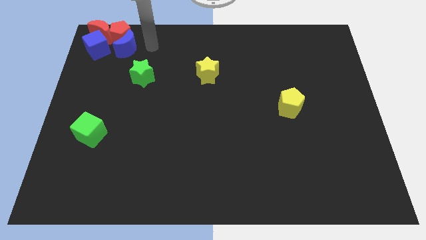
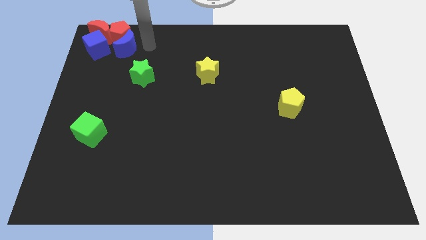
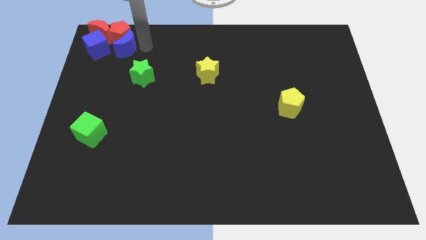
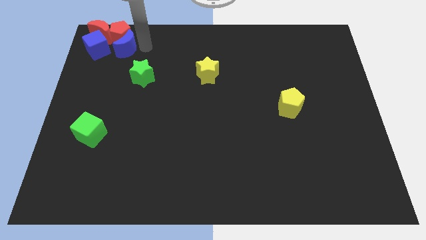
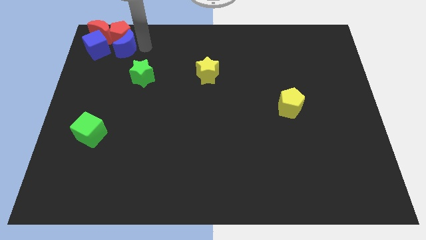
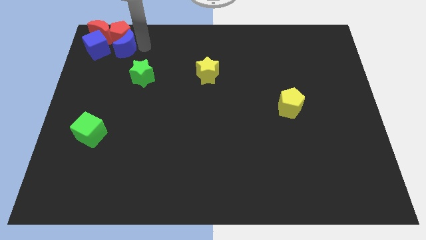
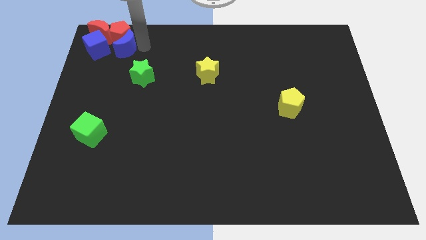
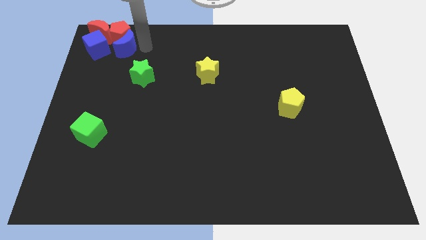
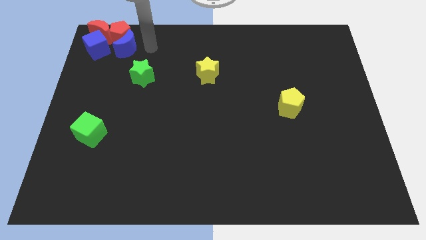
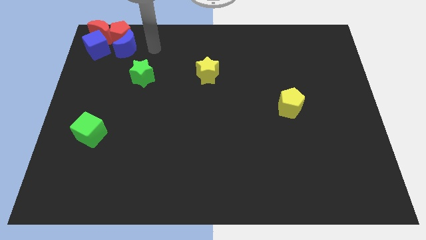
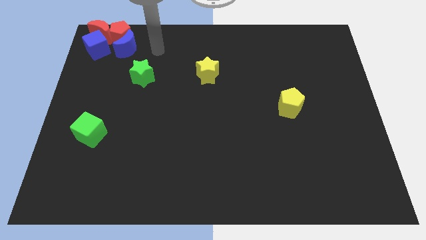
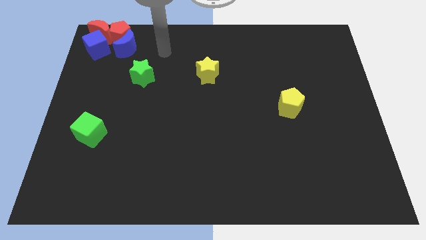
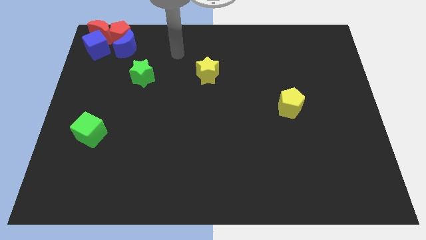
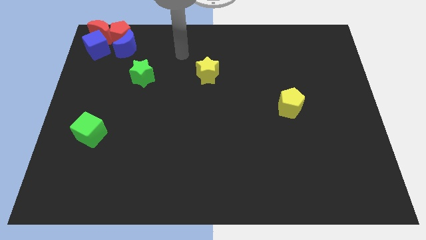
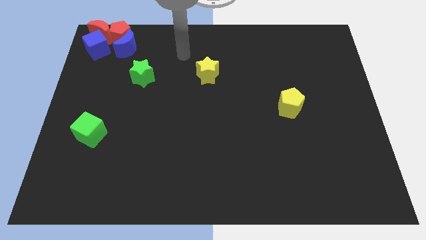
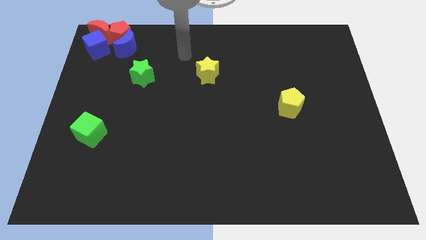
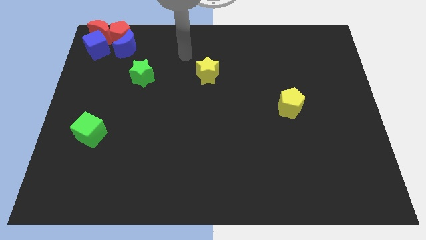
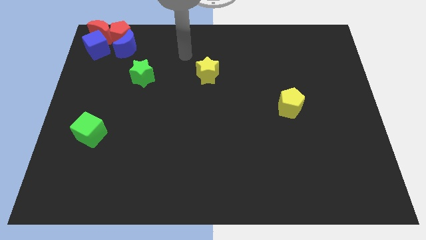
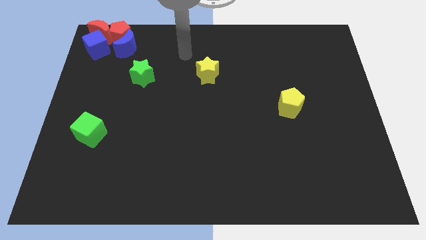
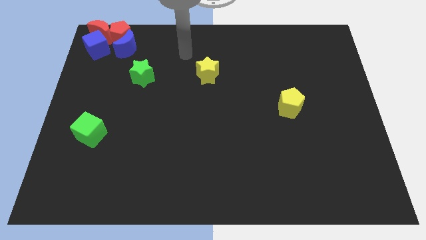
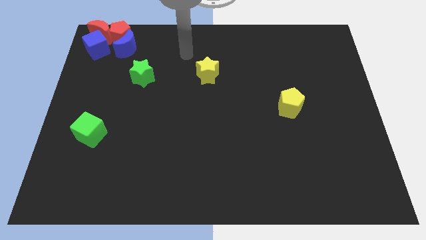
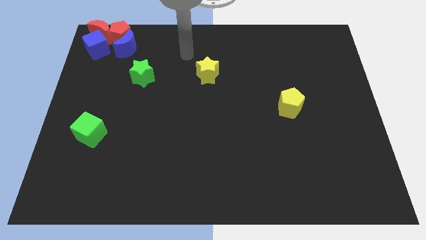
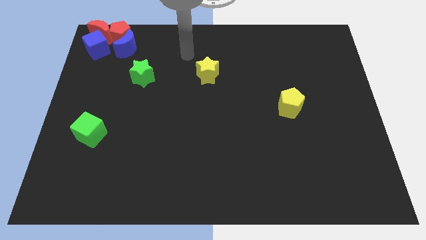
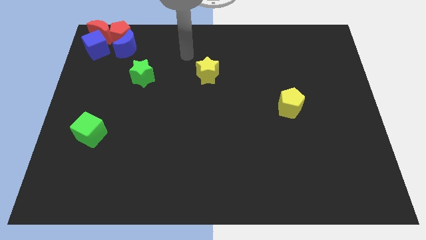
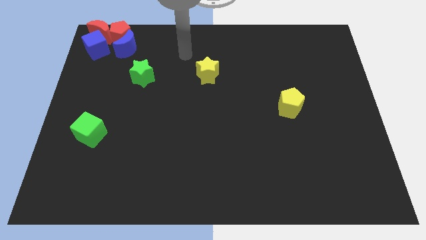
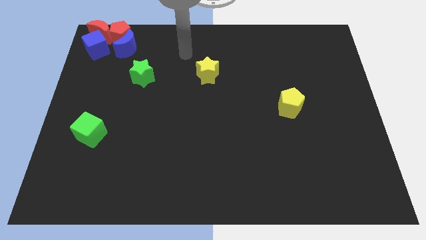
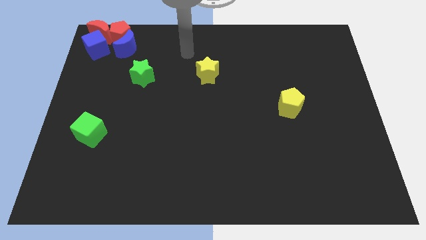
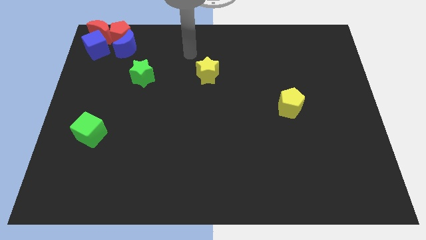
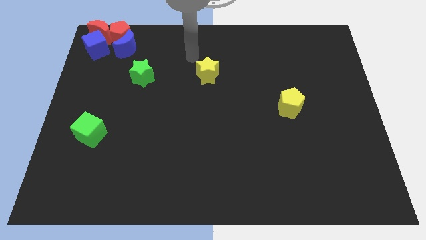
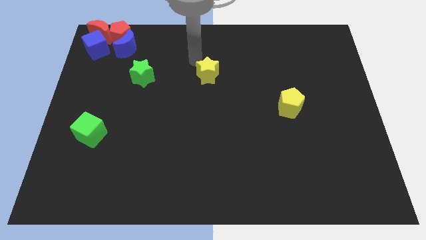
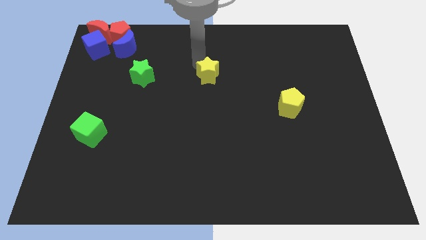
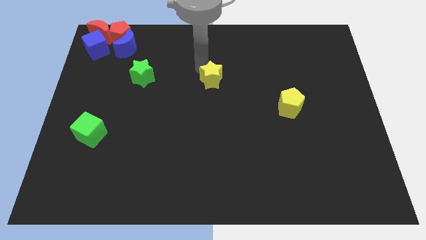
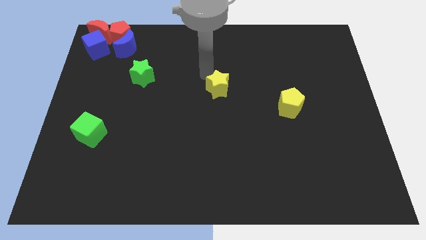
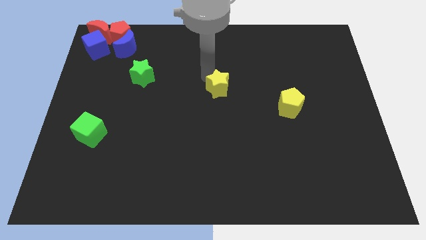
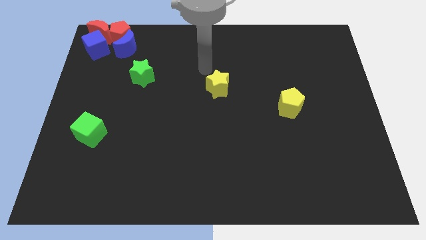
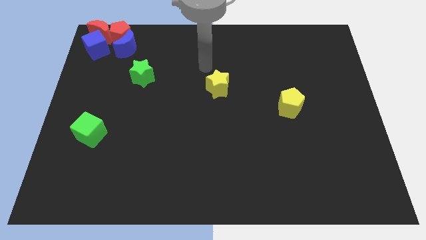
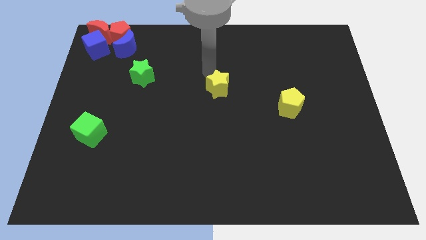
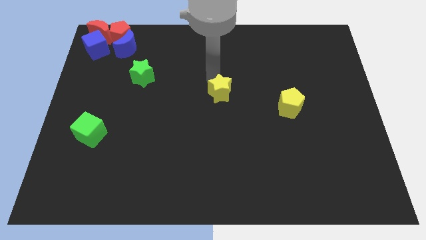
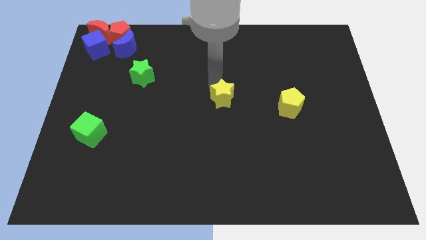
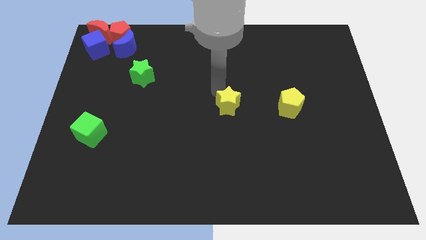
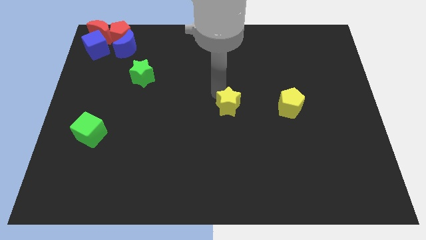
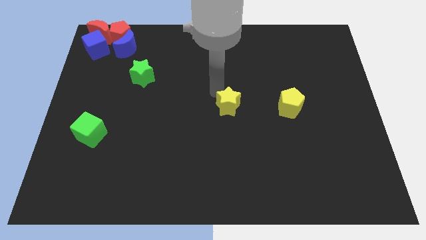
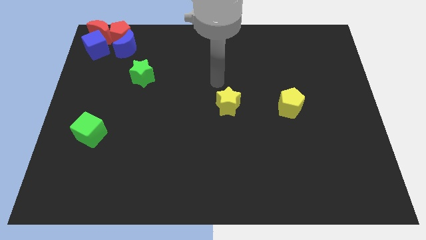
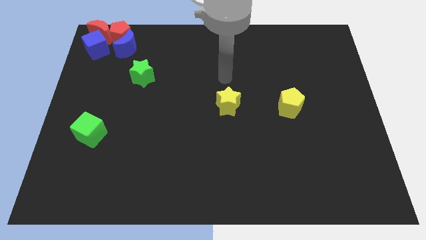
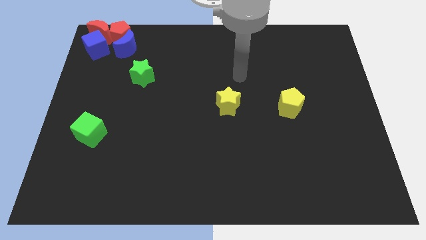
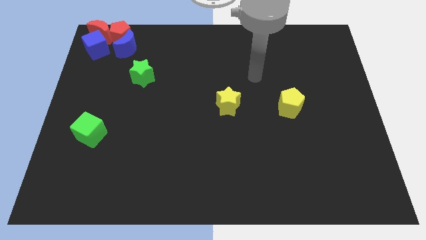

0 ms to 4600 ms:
slide the yellow star to the center of the board

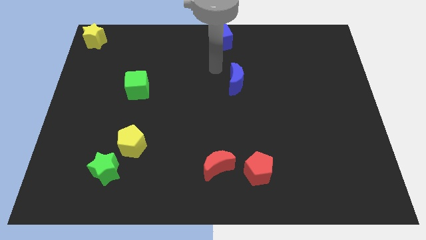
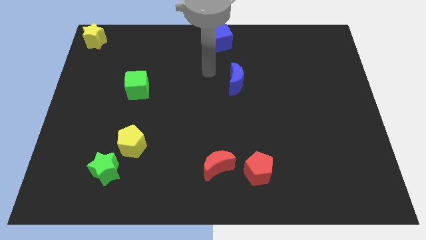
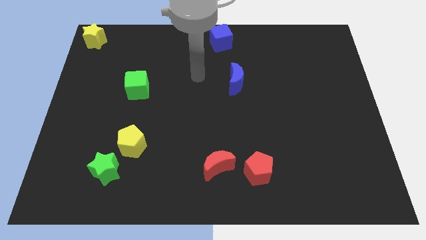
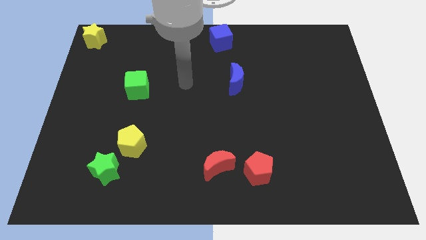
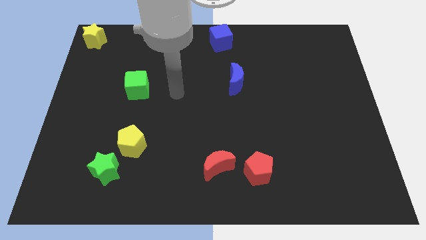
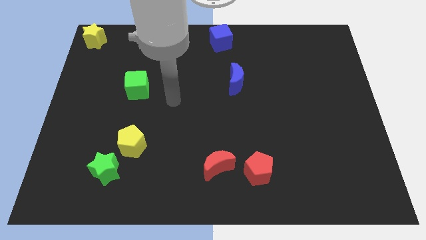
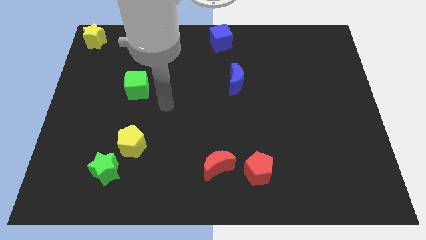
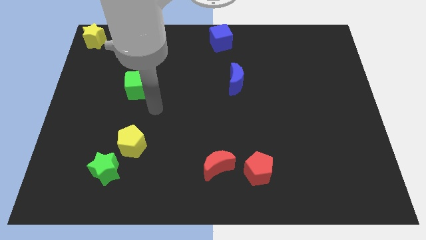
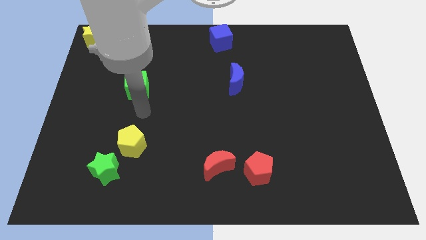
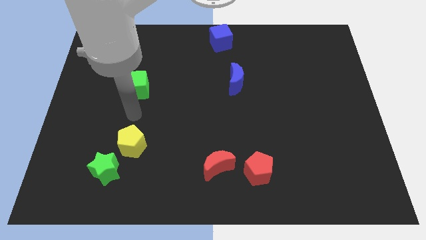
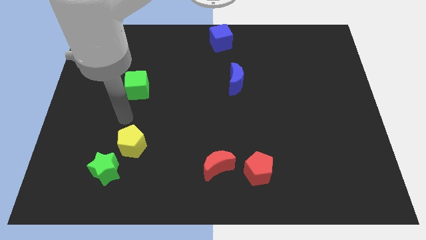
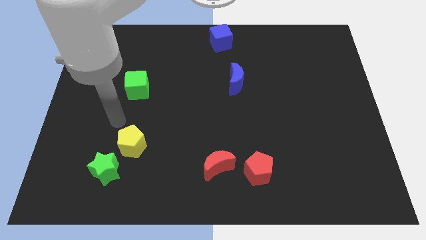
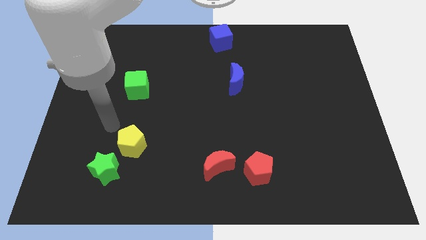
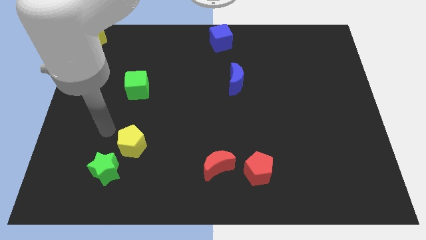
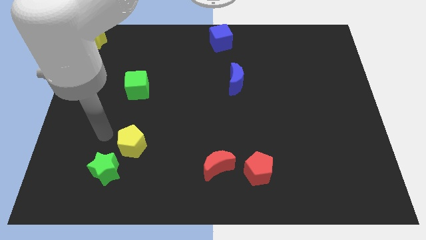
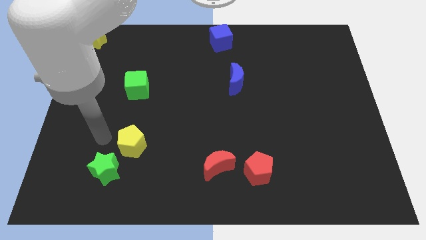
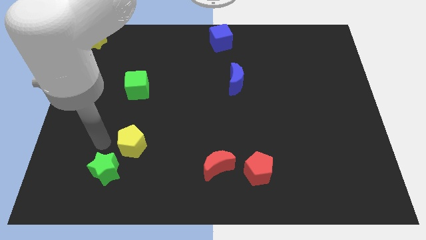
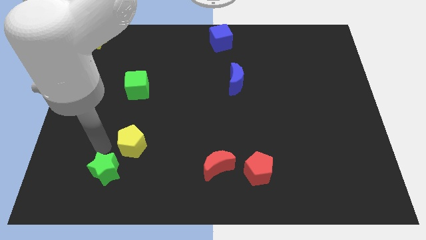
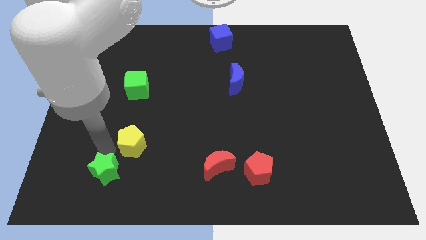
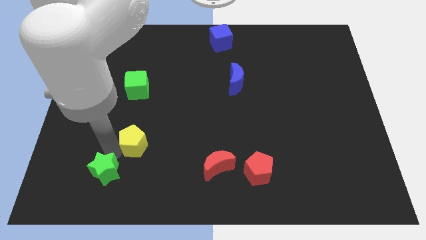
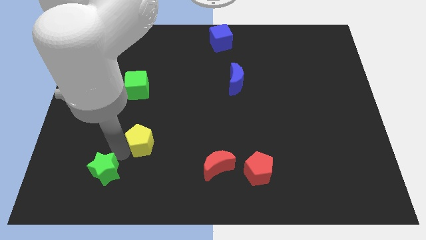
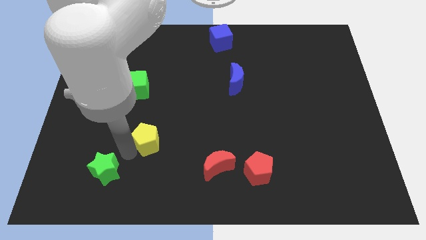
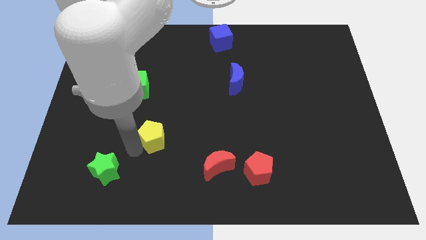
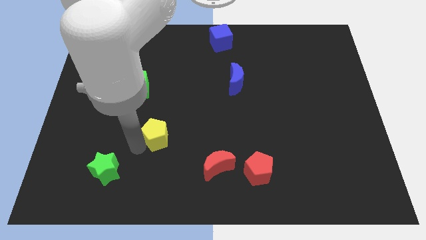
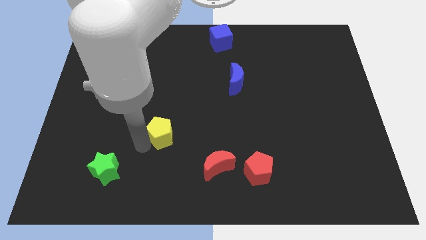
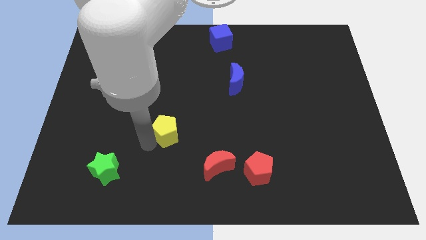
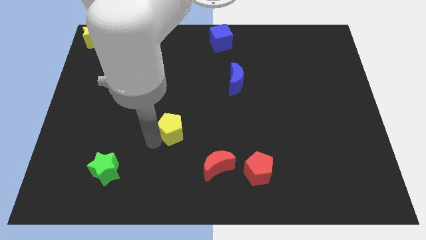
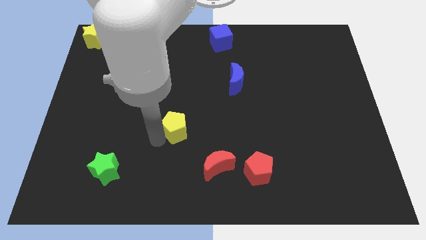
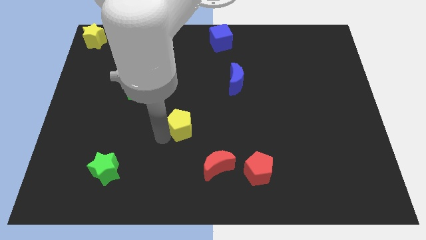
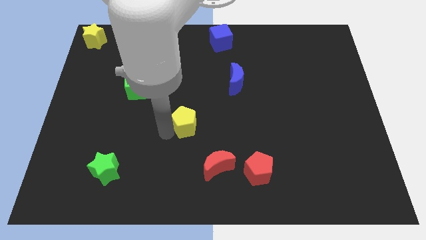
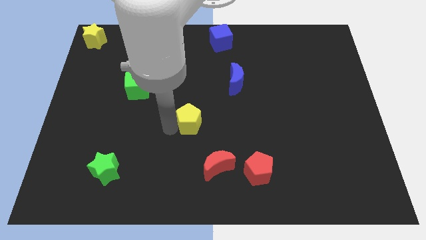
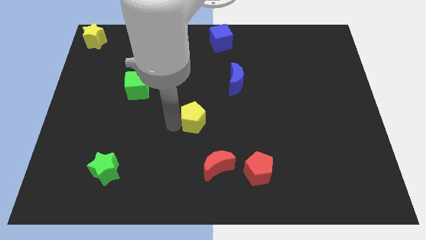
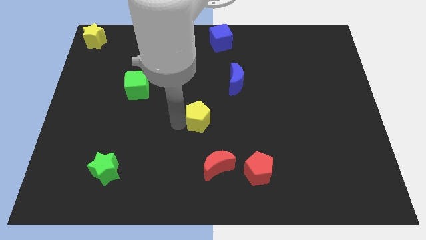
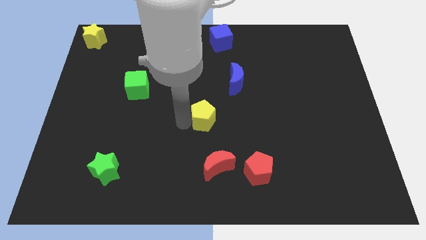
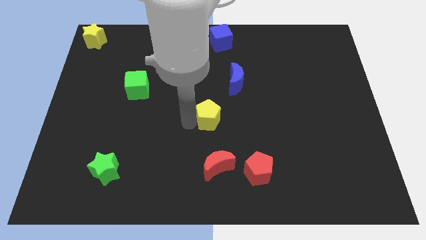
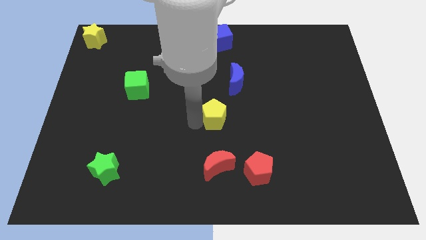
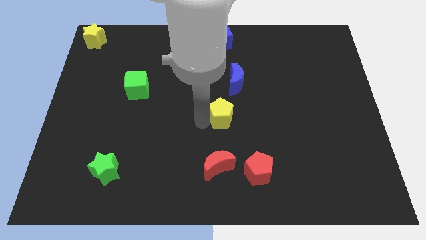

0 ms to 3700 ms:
put the yellow pentagon at the center of the board

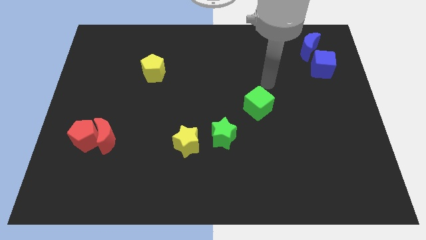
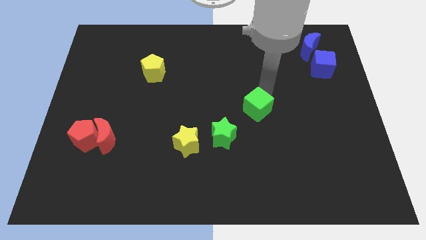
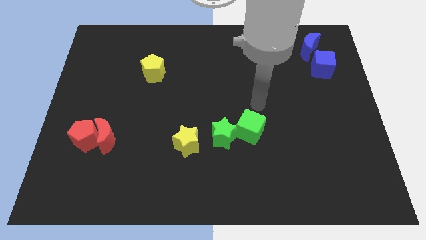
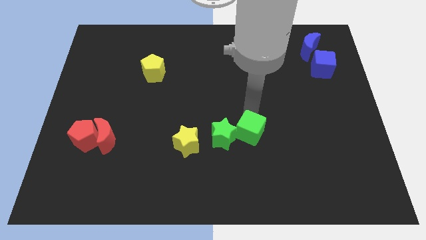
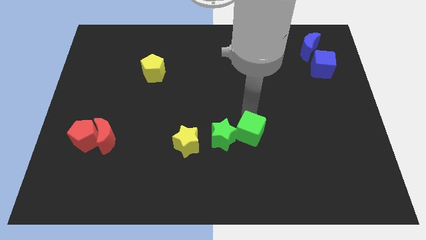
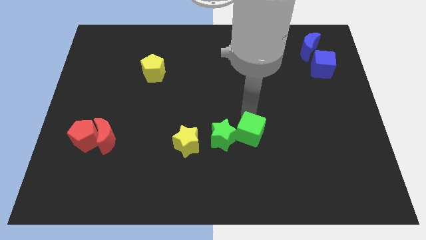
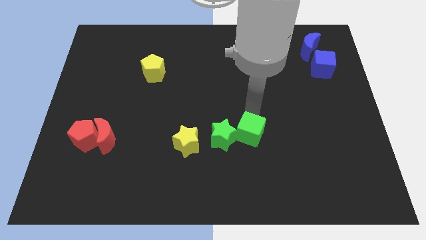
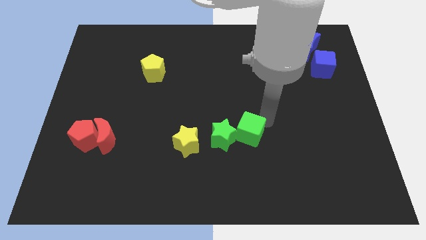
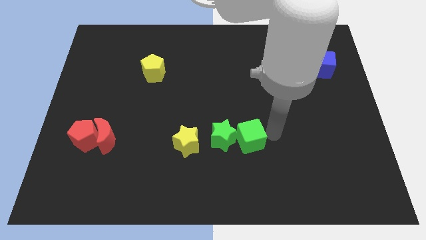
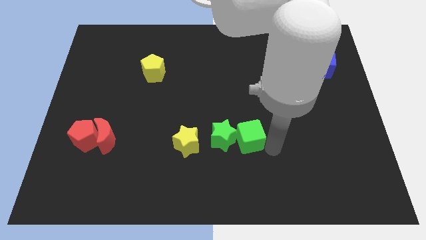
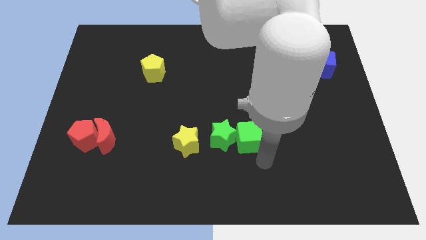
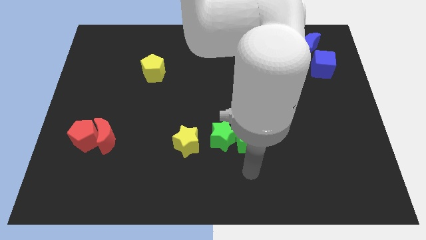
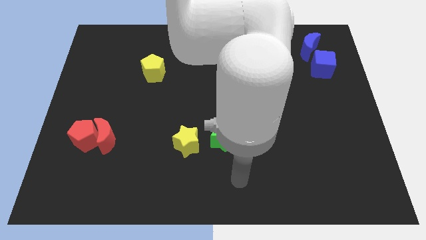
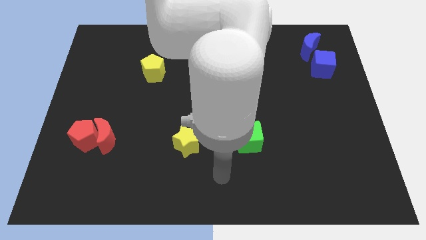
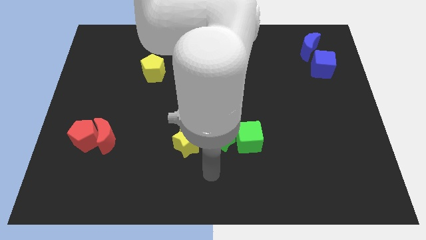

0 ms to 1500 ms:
place the green cube right of green star
